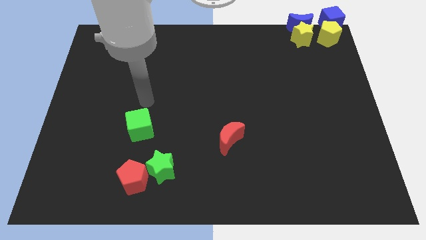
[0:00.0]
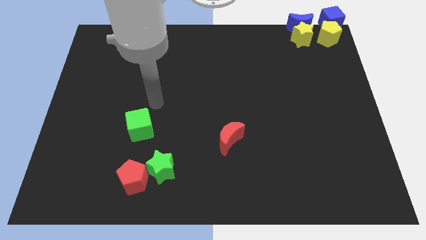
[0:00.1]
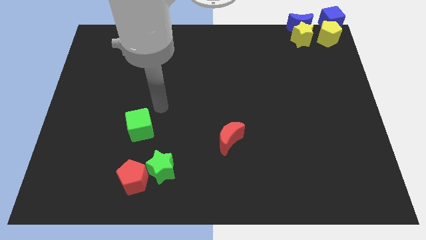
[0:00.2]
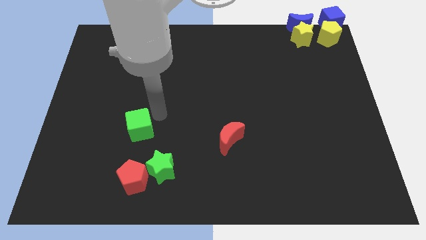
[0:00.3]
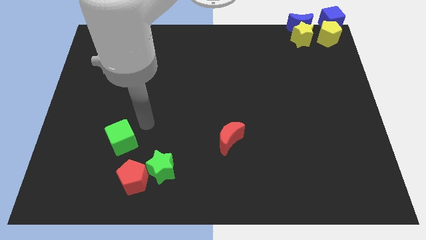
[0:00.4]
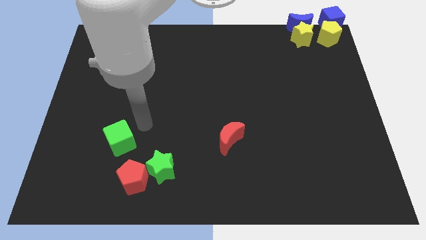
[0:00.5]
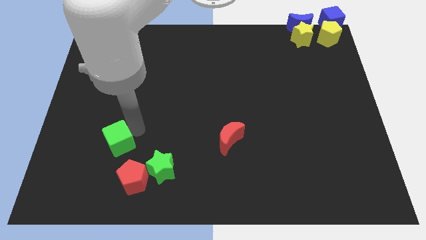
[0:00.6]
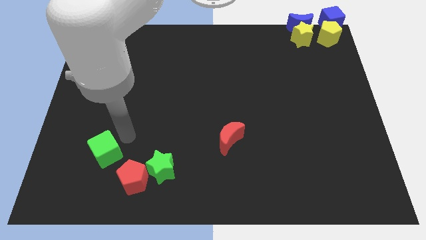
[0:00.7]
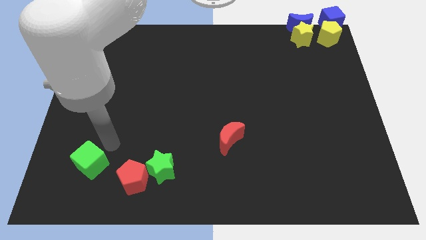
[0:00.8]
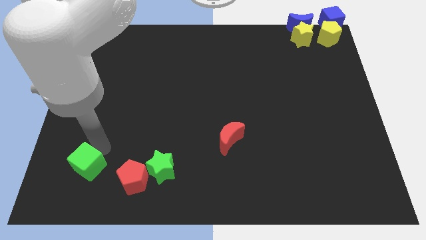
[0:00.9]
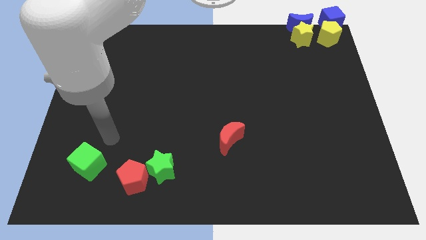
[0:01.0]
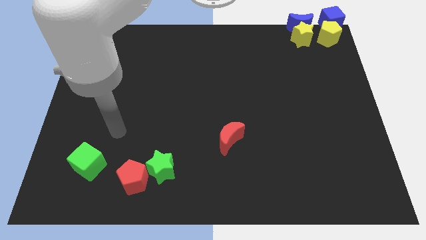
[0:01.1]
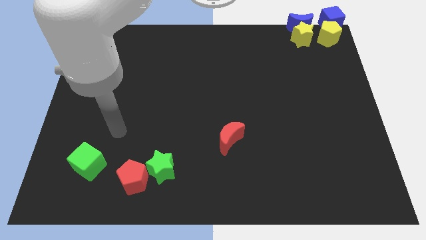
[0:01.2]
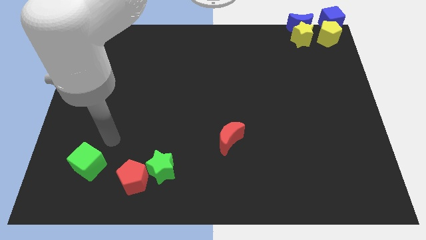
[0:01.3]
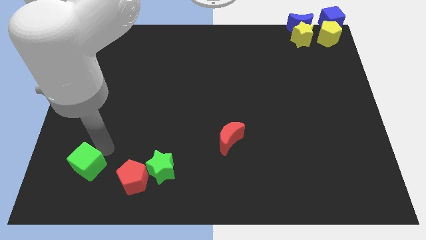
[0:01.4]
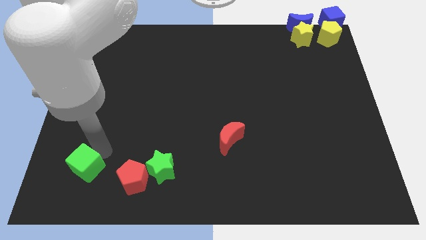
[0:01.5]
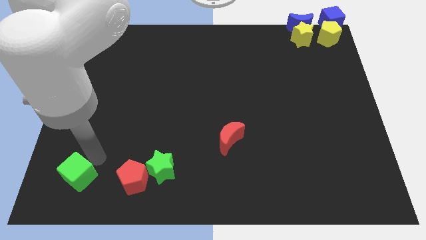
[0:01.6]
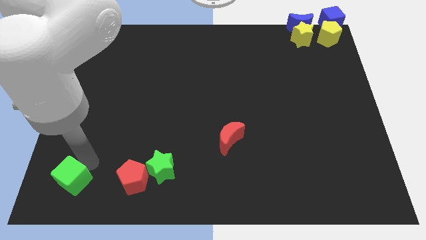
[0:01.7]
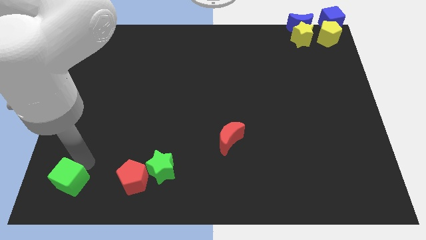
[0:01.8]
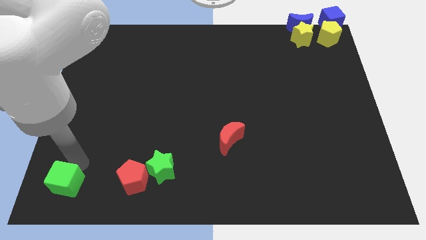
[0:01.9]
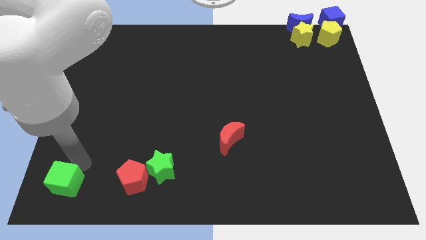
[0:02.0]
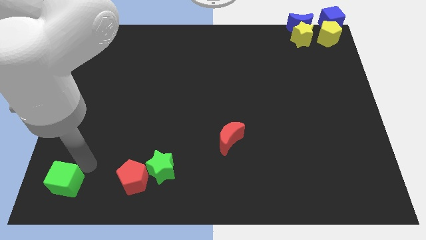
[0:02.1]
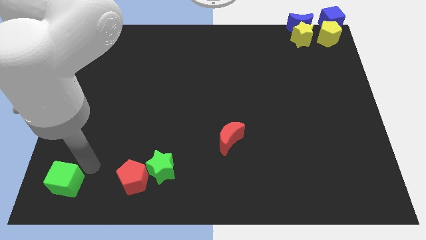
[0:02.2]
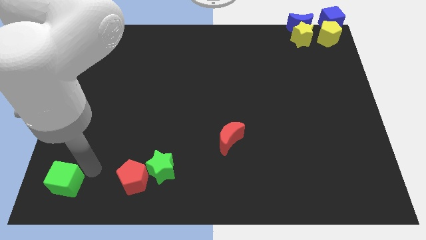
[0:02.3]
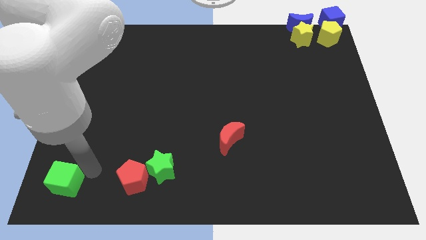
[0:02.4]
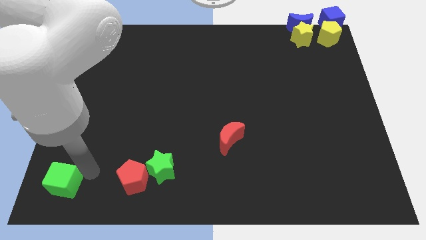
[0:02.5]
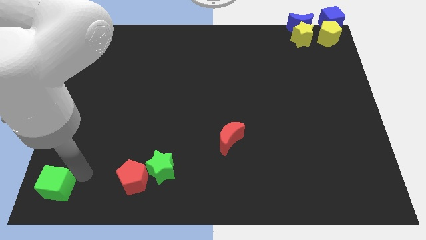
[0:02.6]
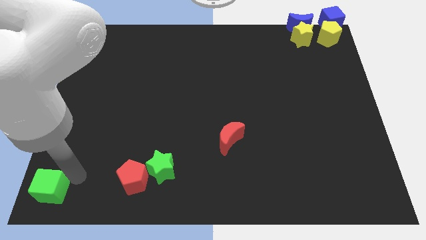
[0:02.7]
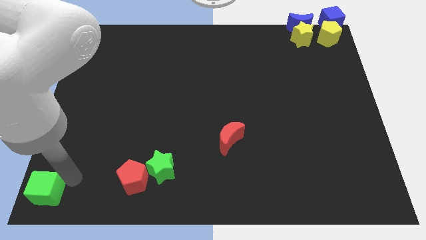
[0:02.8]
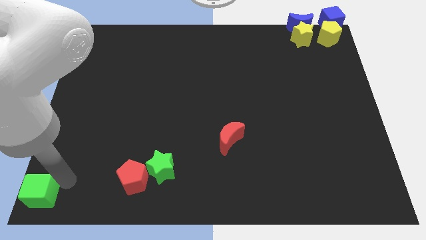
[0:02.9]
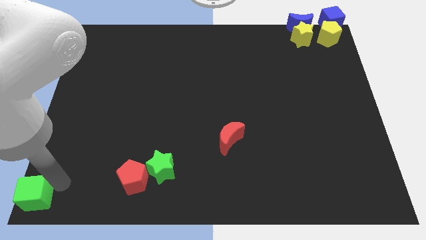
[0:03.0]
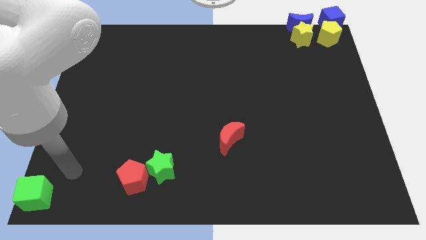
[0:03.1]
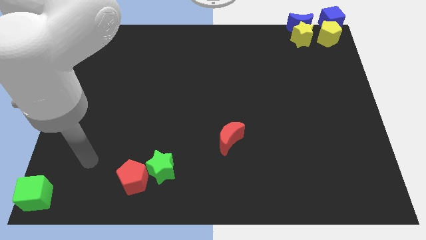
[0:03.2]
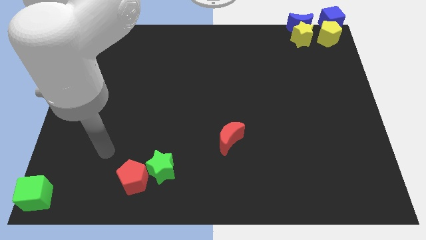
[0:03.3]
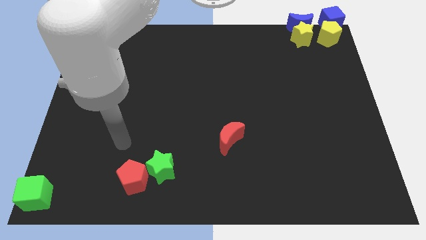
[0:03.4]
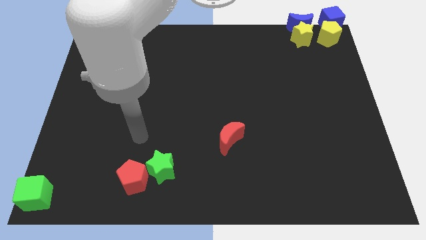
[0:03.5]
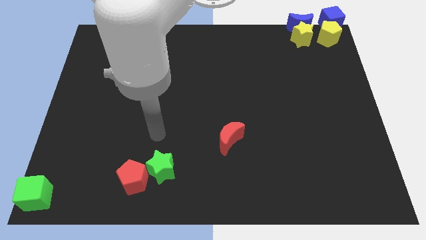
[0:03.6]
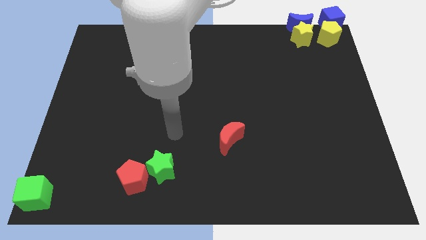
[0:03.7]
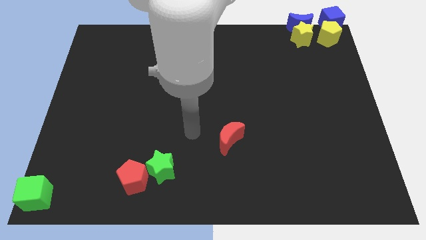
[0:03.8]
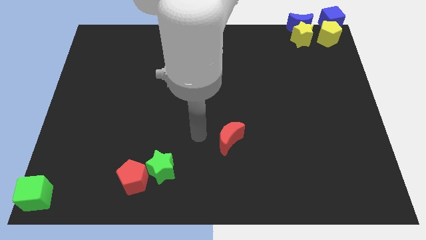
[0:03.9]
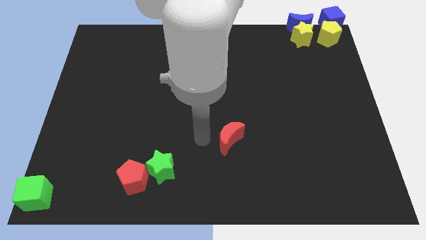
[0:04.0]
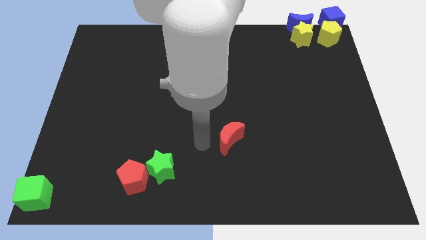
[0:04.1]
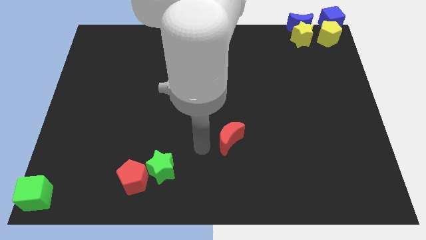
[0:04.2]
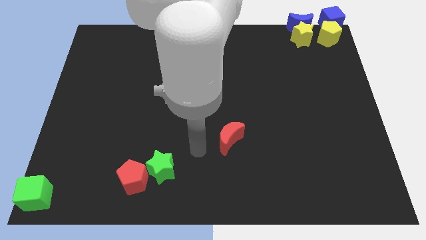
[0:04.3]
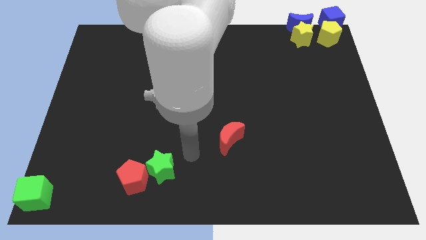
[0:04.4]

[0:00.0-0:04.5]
move the green cube to the bottom left of the board

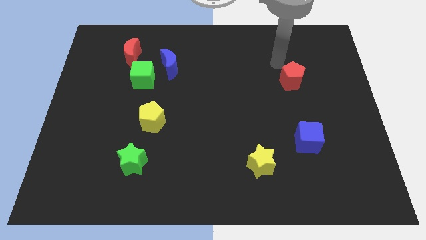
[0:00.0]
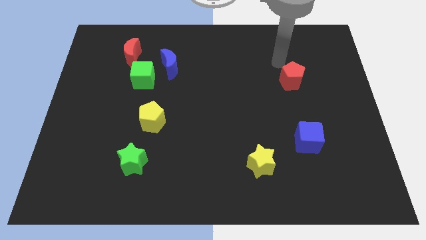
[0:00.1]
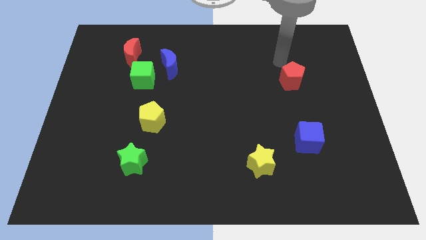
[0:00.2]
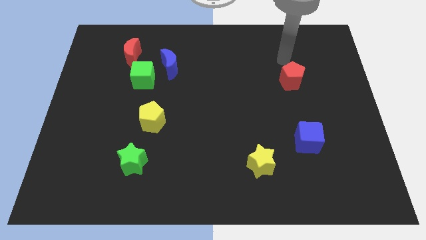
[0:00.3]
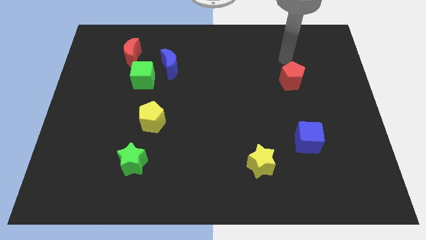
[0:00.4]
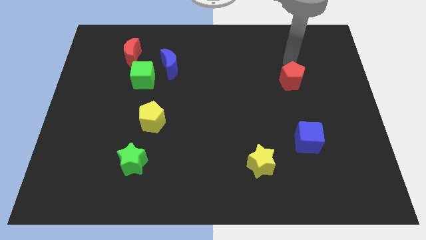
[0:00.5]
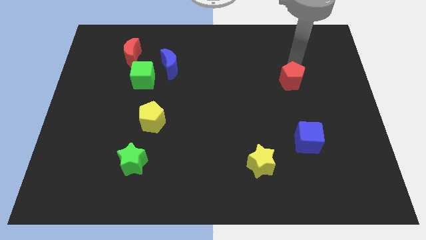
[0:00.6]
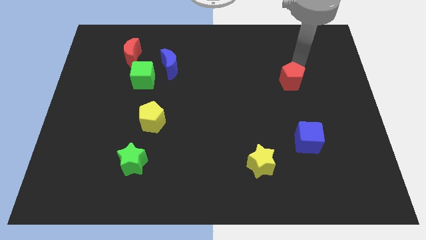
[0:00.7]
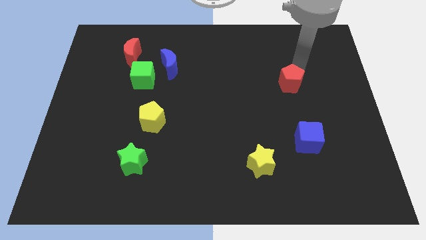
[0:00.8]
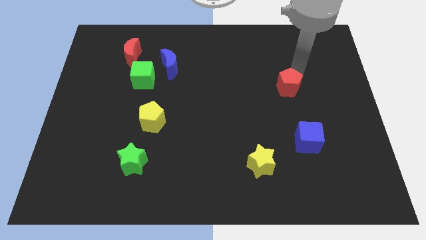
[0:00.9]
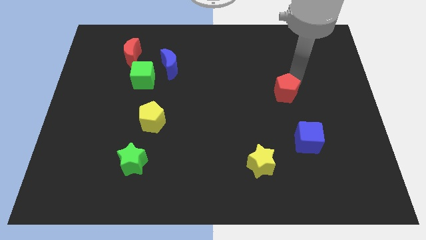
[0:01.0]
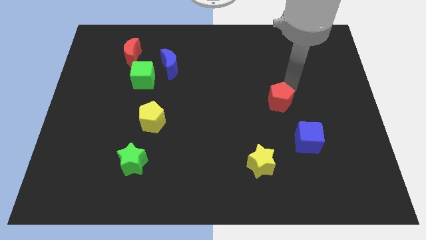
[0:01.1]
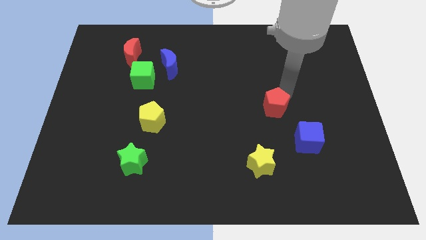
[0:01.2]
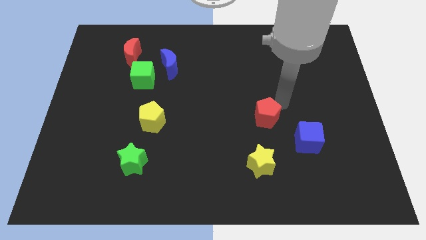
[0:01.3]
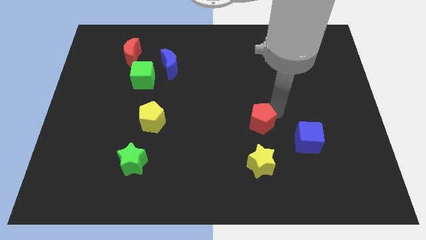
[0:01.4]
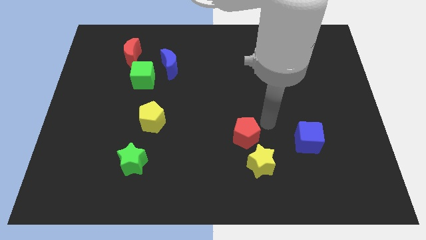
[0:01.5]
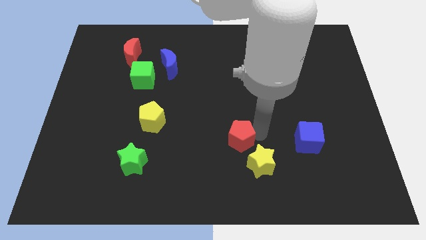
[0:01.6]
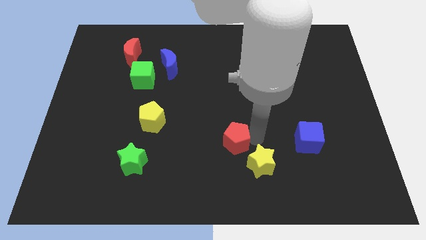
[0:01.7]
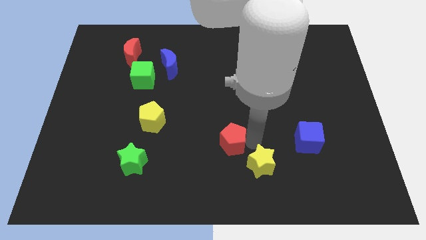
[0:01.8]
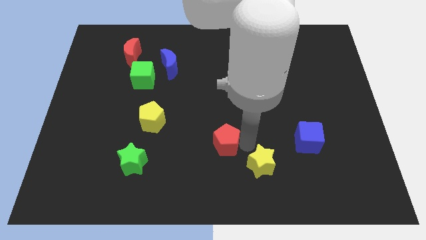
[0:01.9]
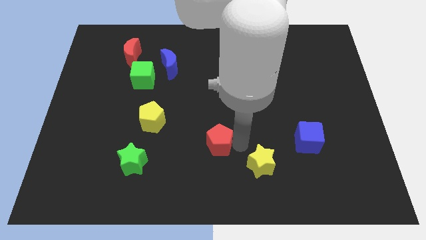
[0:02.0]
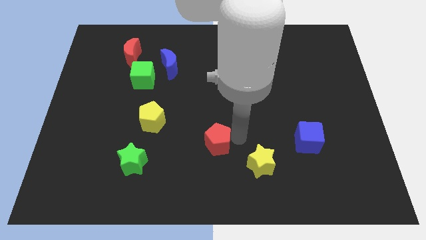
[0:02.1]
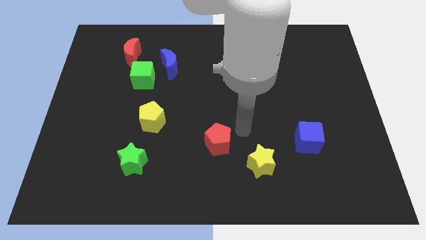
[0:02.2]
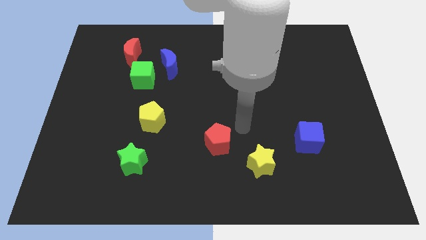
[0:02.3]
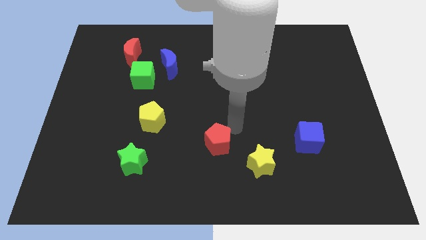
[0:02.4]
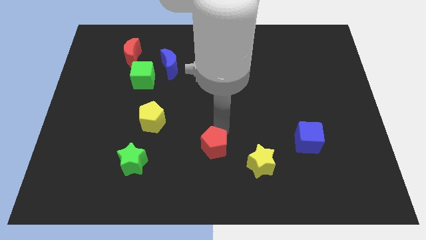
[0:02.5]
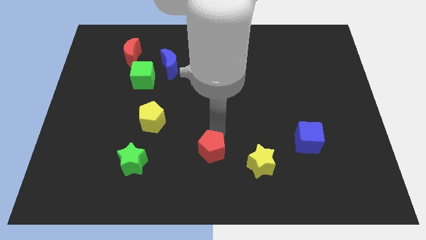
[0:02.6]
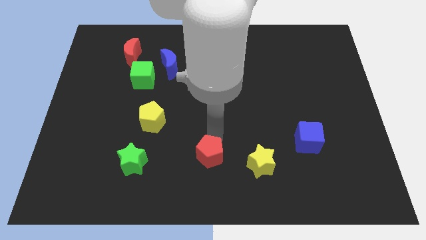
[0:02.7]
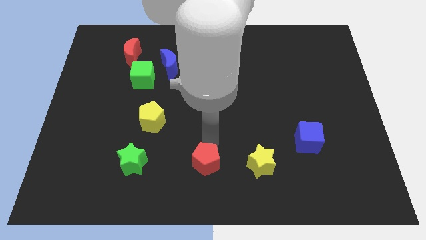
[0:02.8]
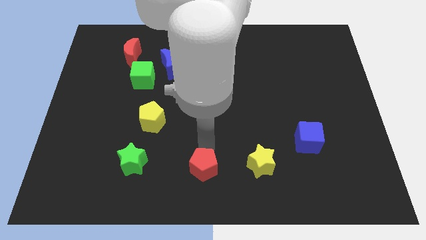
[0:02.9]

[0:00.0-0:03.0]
place the red pentagon in between the green and yellow star

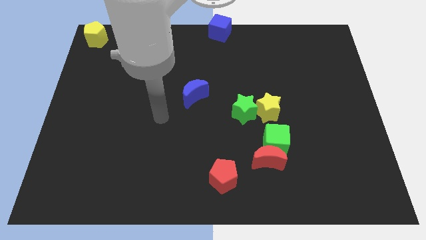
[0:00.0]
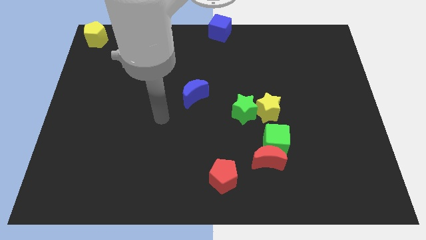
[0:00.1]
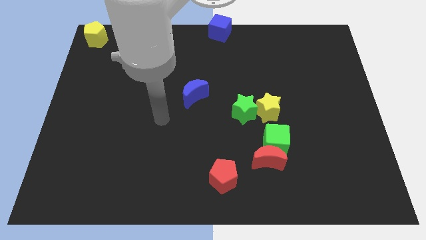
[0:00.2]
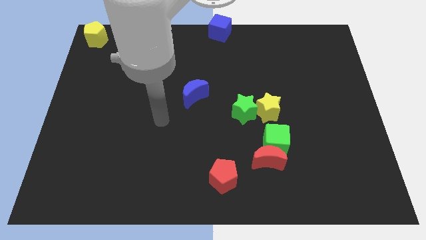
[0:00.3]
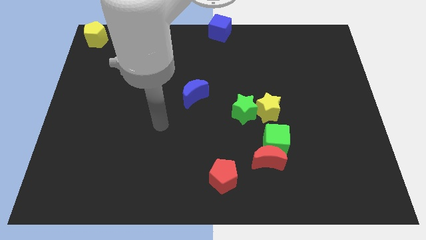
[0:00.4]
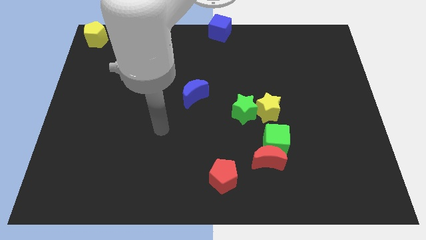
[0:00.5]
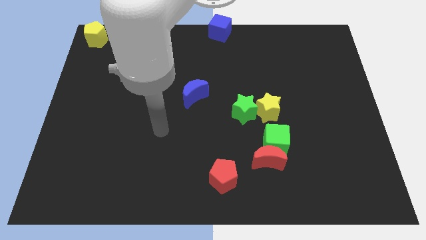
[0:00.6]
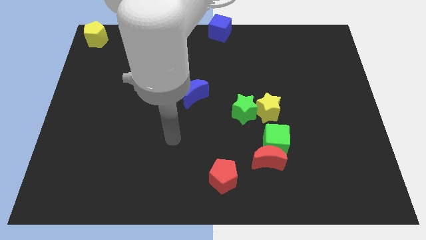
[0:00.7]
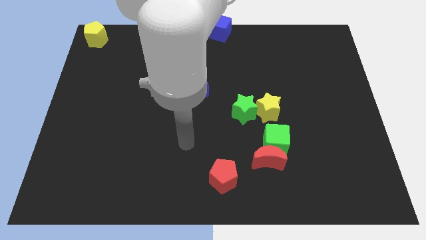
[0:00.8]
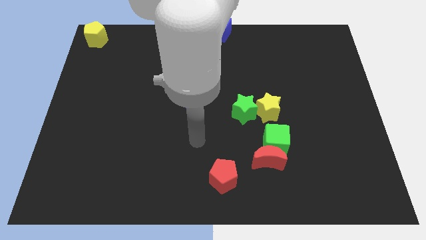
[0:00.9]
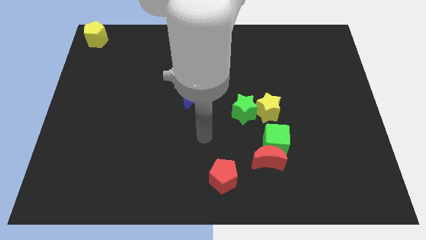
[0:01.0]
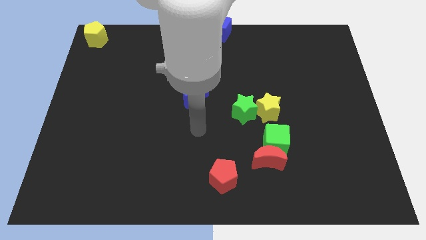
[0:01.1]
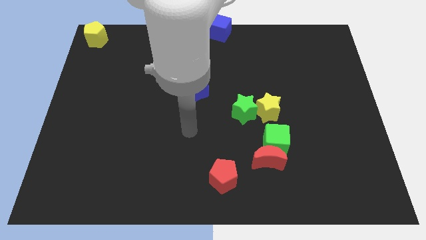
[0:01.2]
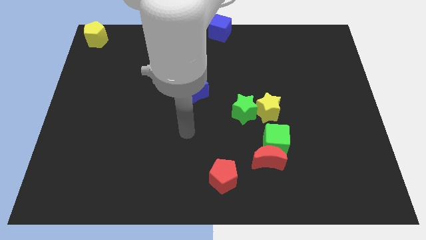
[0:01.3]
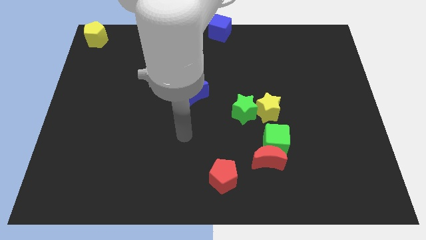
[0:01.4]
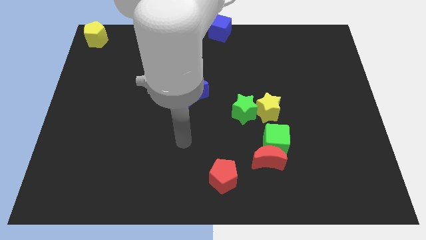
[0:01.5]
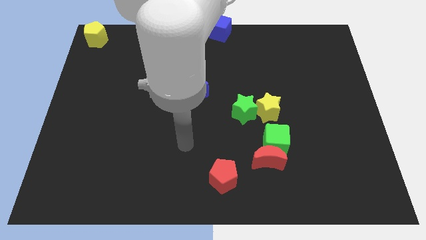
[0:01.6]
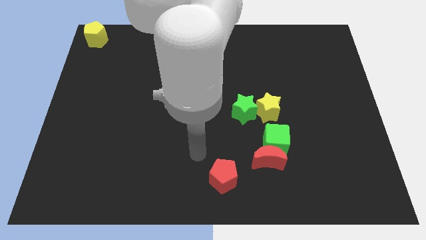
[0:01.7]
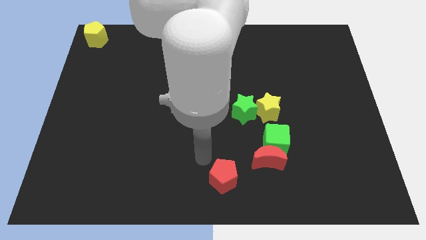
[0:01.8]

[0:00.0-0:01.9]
point the arm to the top left of the red pentagon
